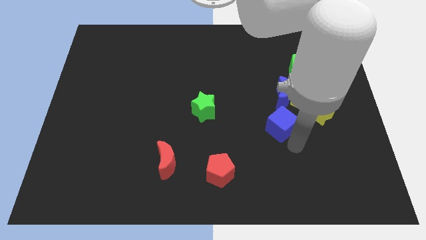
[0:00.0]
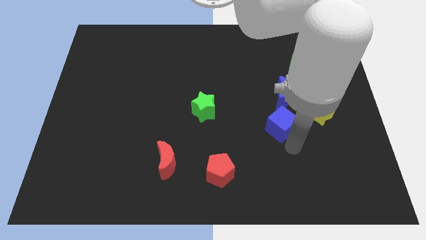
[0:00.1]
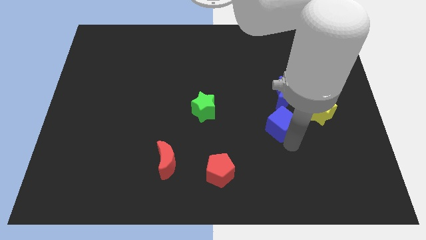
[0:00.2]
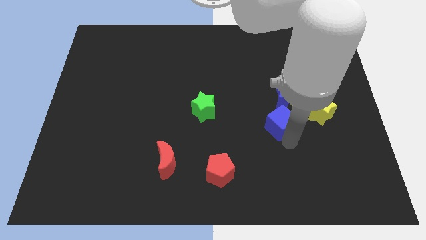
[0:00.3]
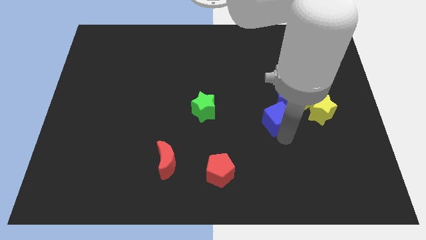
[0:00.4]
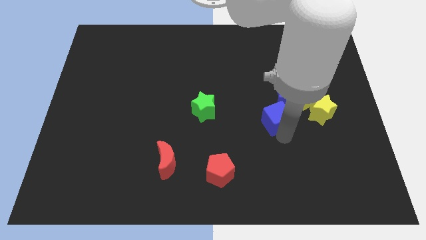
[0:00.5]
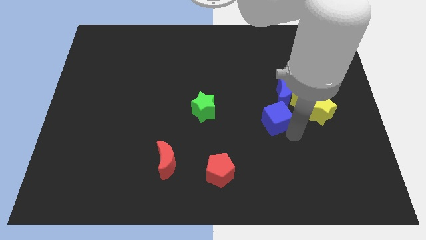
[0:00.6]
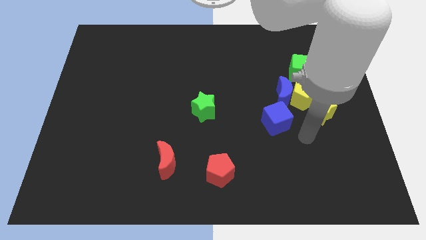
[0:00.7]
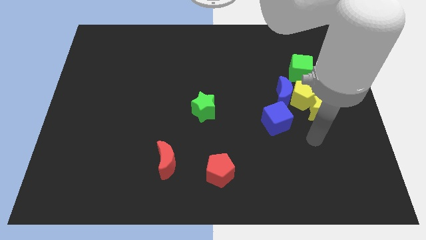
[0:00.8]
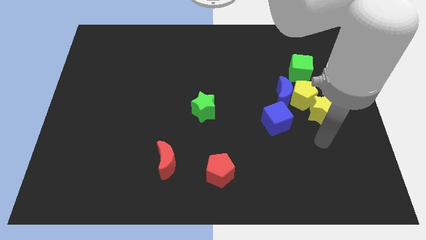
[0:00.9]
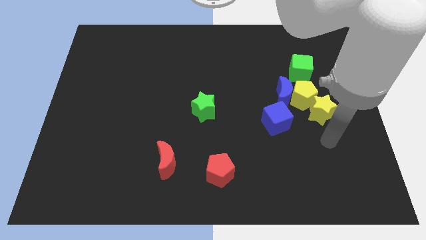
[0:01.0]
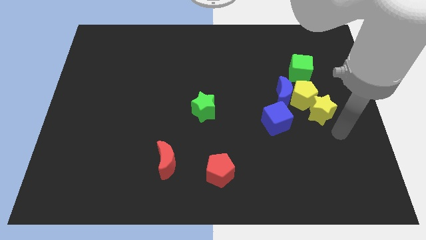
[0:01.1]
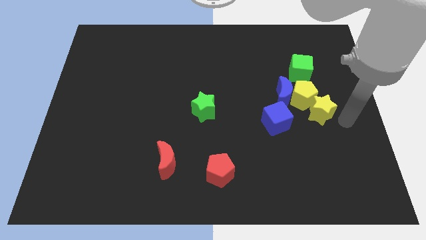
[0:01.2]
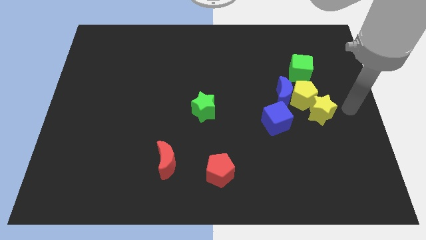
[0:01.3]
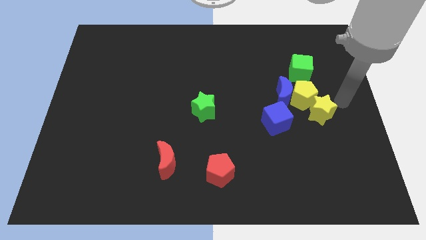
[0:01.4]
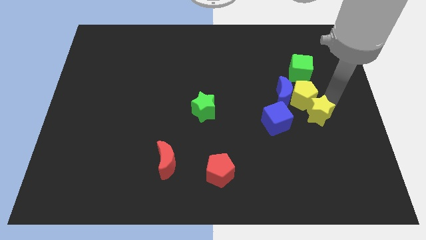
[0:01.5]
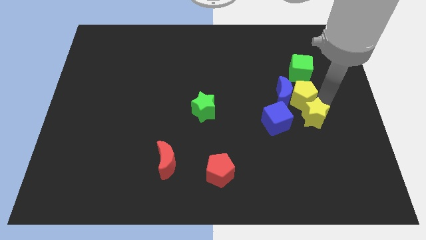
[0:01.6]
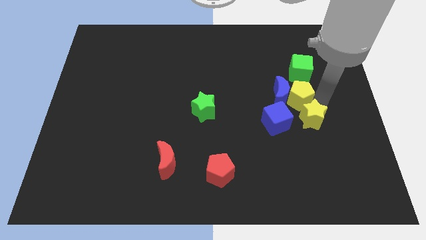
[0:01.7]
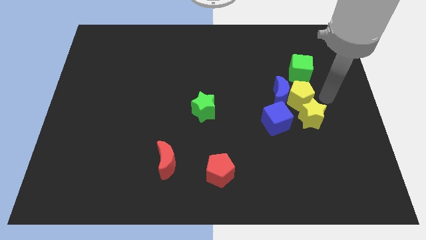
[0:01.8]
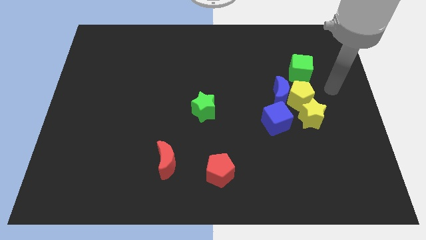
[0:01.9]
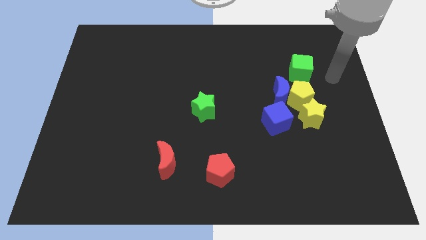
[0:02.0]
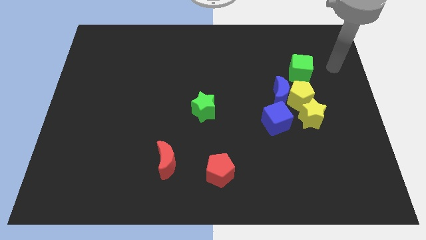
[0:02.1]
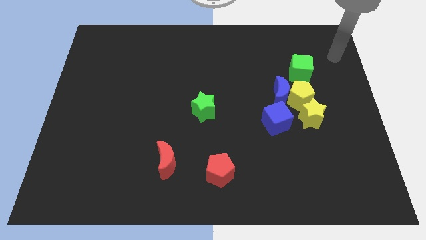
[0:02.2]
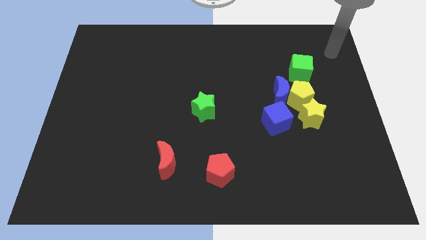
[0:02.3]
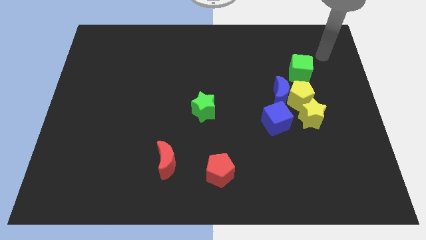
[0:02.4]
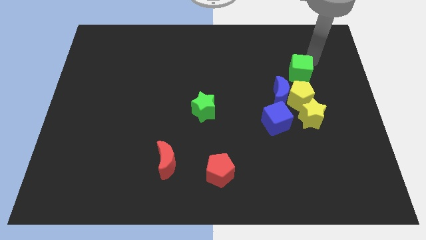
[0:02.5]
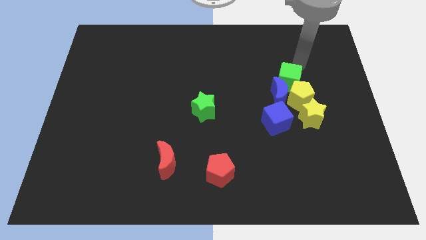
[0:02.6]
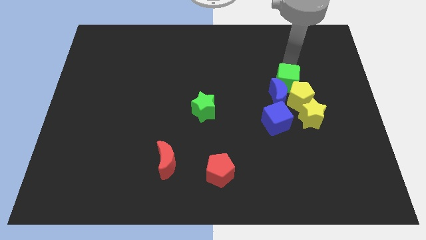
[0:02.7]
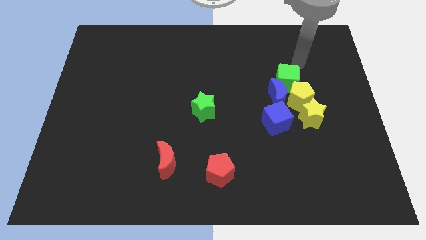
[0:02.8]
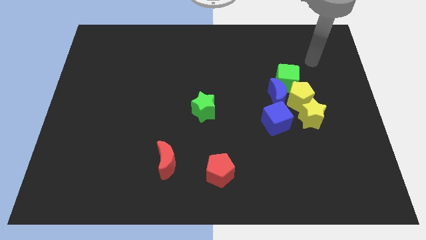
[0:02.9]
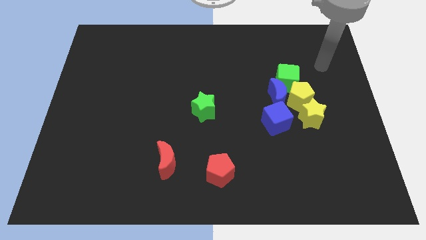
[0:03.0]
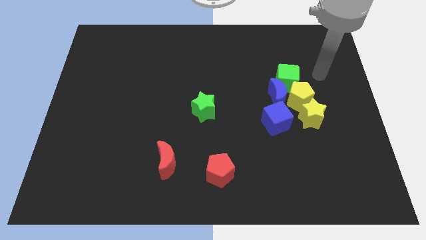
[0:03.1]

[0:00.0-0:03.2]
make a group out of yellow blocksblue blocks and green cube

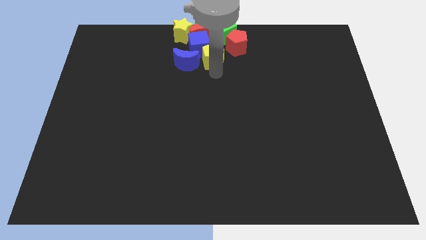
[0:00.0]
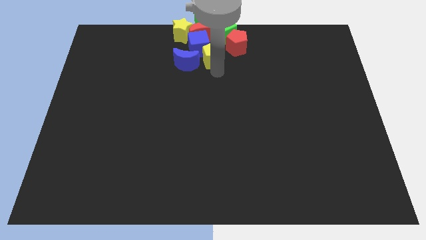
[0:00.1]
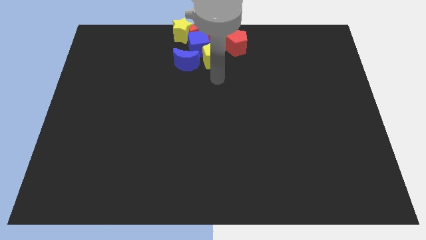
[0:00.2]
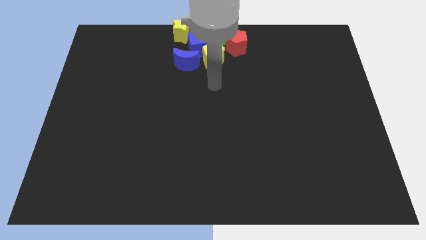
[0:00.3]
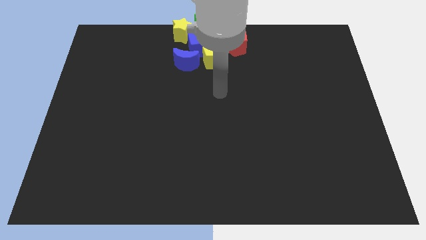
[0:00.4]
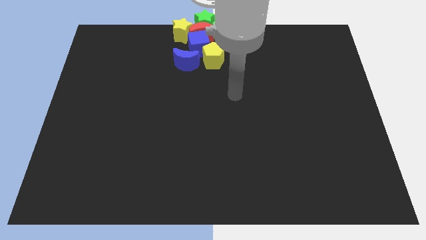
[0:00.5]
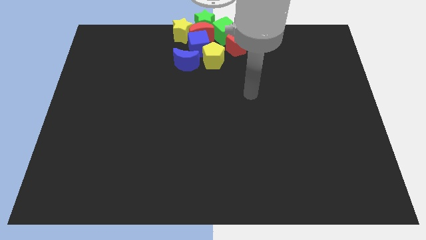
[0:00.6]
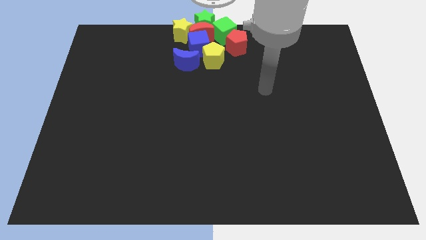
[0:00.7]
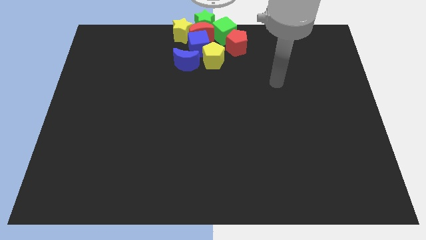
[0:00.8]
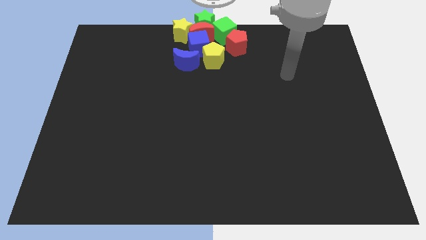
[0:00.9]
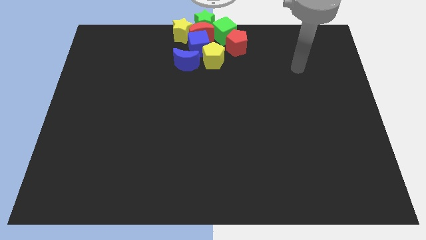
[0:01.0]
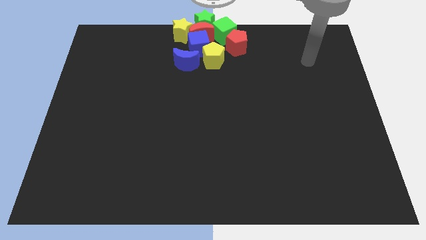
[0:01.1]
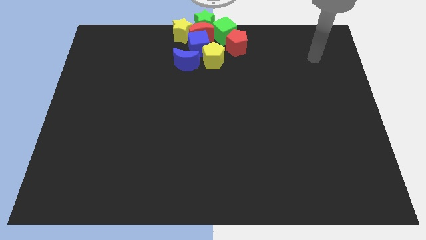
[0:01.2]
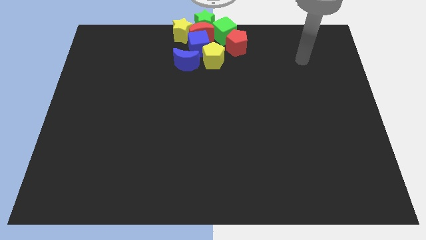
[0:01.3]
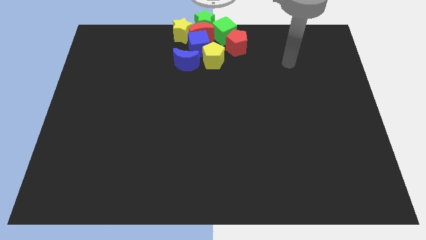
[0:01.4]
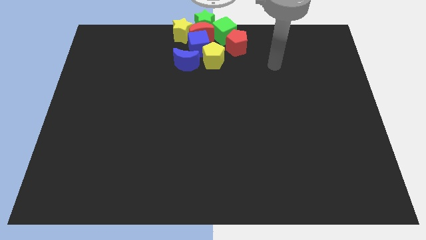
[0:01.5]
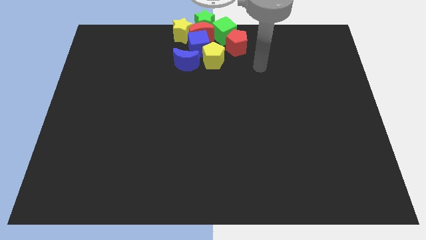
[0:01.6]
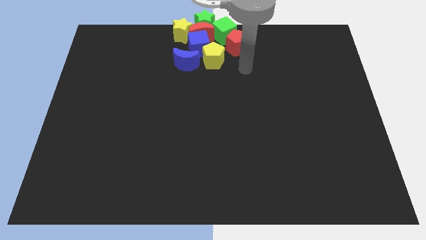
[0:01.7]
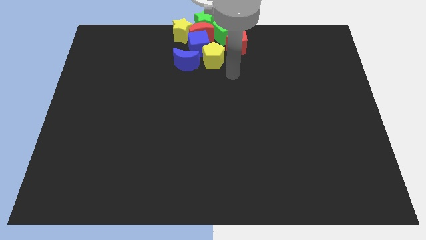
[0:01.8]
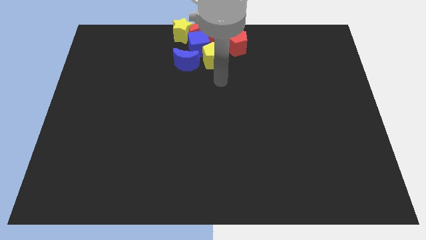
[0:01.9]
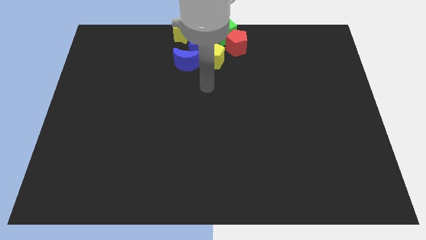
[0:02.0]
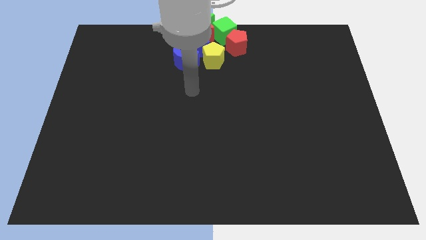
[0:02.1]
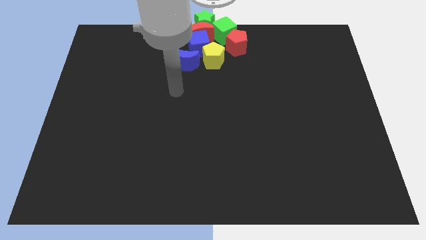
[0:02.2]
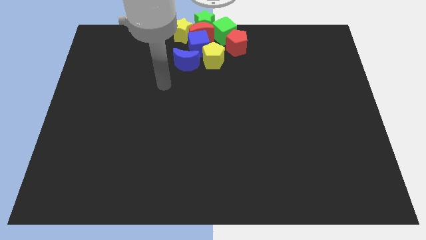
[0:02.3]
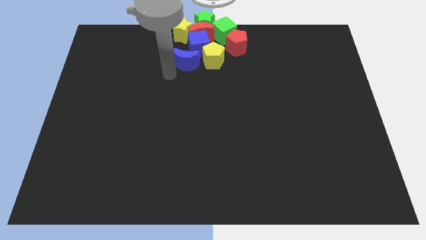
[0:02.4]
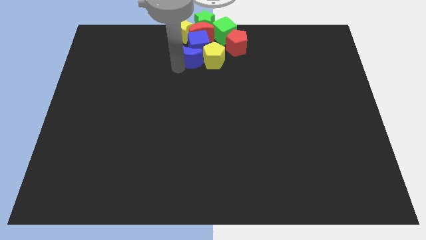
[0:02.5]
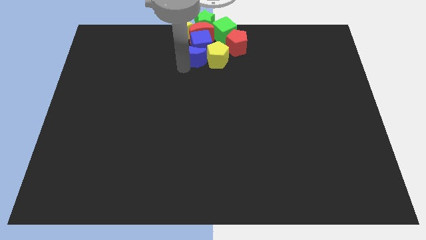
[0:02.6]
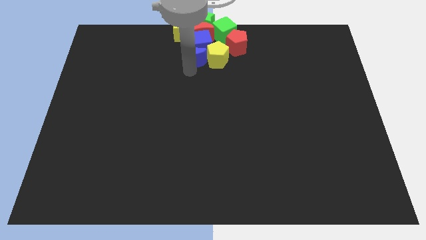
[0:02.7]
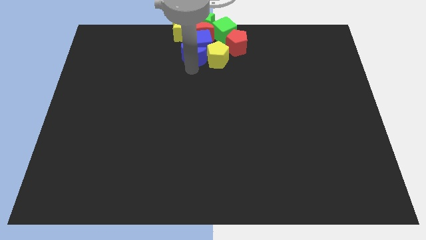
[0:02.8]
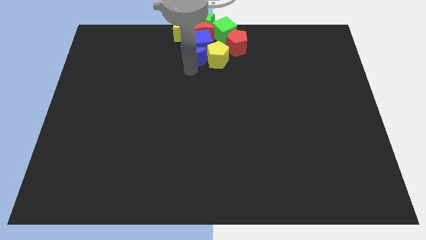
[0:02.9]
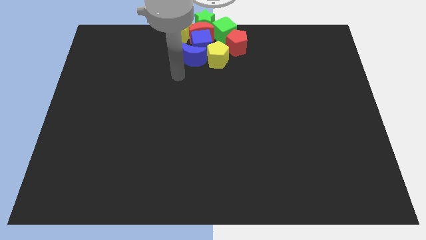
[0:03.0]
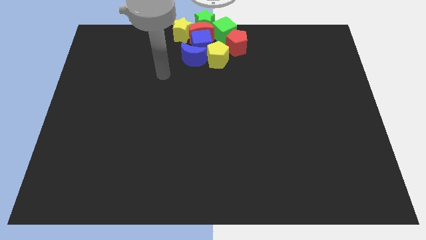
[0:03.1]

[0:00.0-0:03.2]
slide the blue moon into the blue cube

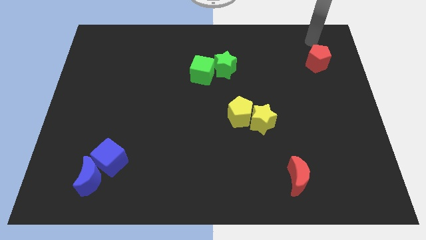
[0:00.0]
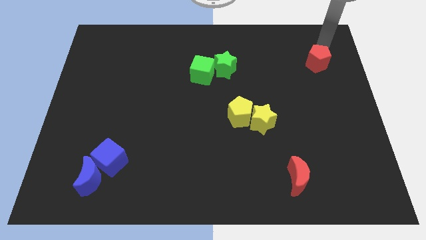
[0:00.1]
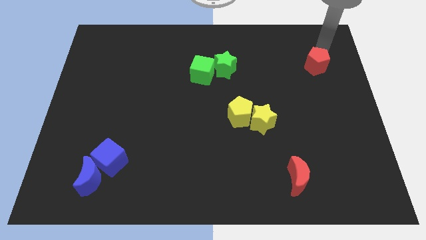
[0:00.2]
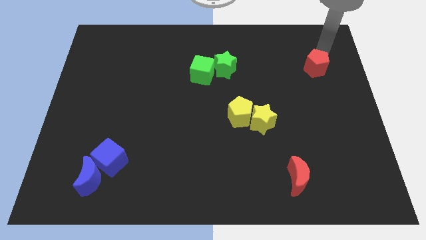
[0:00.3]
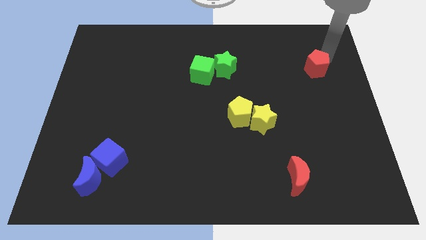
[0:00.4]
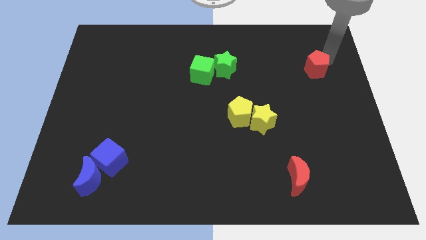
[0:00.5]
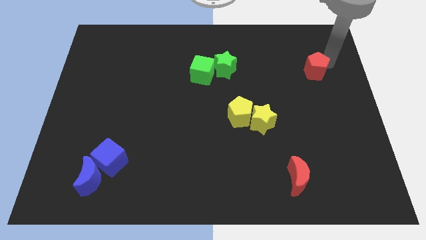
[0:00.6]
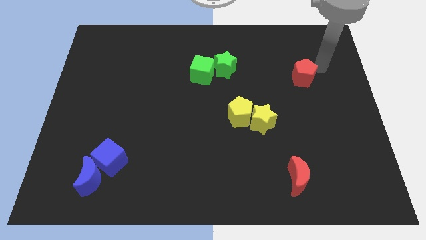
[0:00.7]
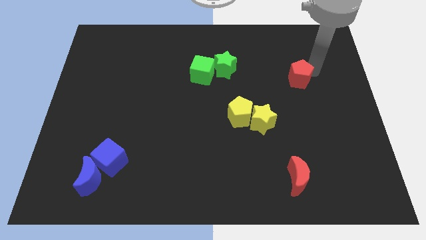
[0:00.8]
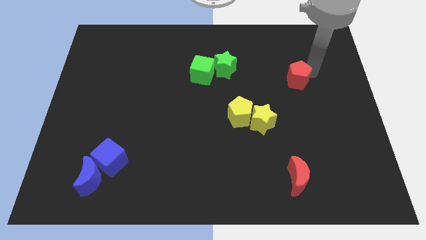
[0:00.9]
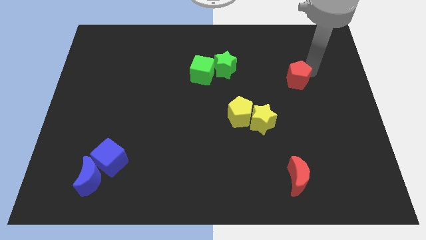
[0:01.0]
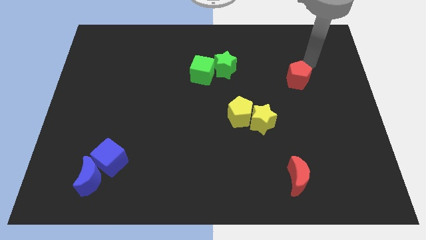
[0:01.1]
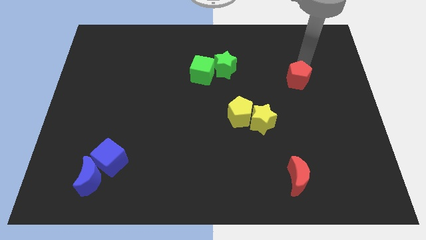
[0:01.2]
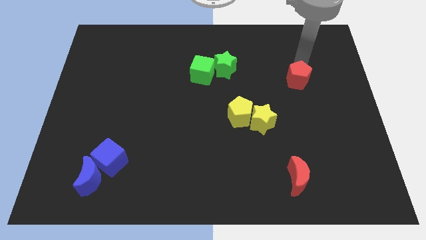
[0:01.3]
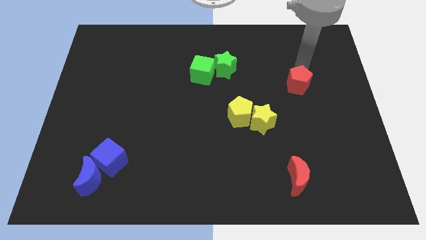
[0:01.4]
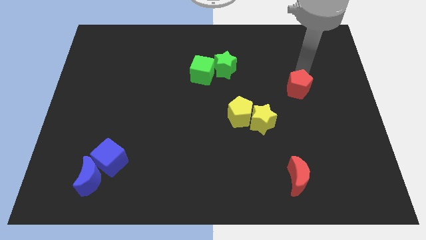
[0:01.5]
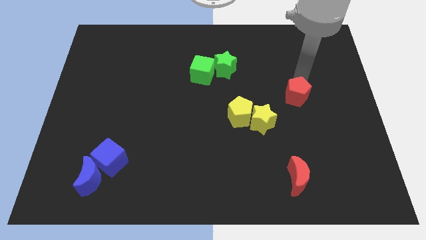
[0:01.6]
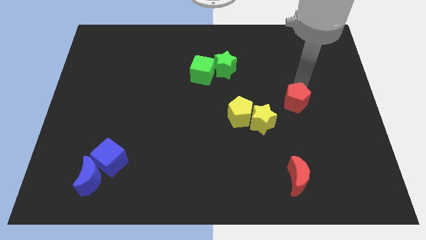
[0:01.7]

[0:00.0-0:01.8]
push the red pentagon towards the yellow blocks

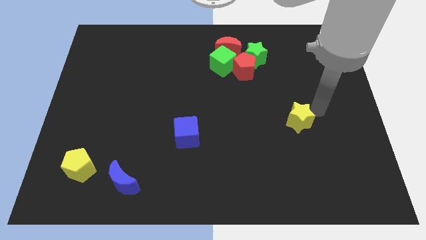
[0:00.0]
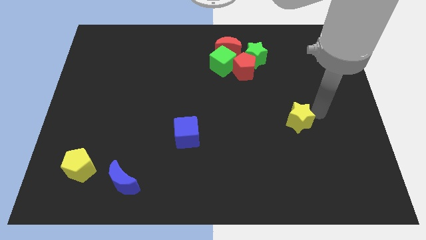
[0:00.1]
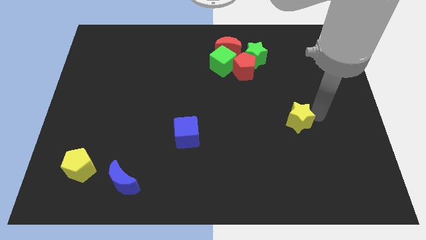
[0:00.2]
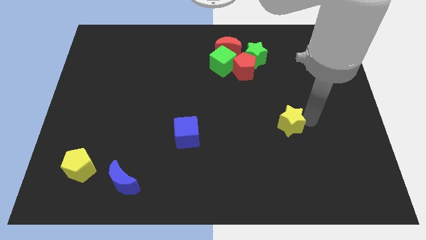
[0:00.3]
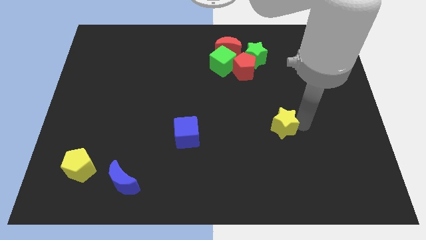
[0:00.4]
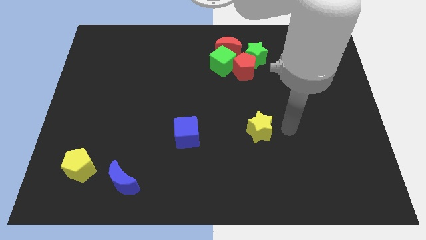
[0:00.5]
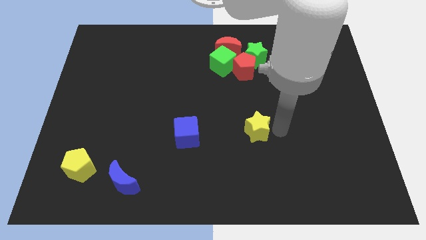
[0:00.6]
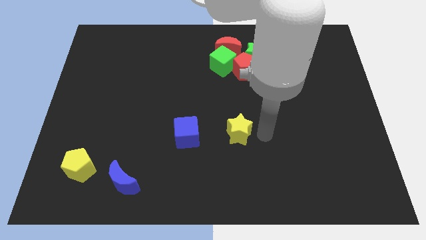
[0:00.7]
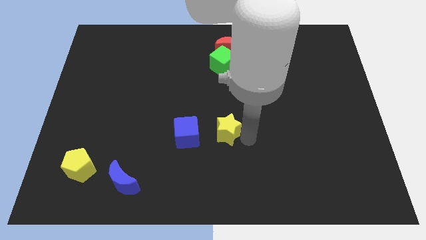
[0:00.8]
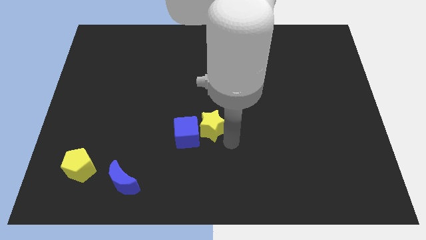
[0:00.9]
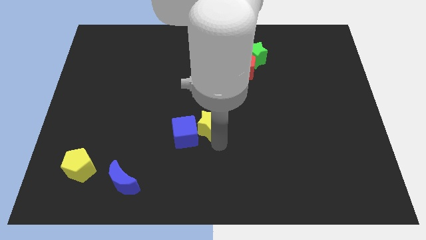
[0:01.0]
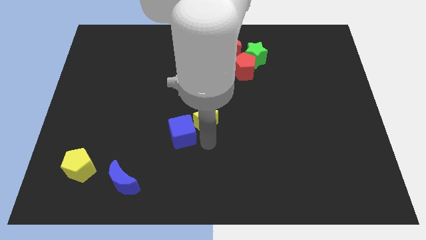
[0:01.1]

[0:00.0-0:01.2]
push the yellow star right to the blue cube
